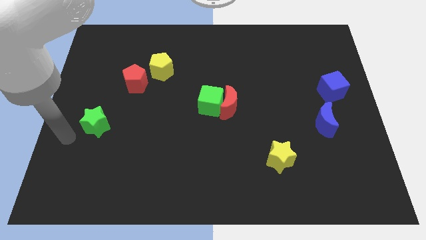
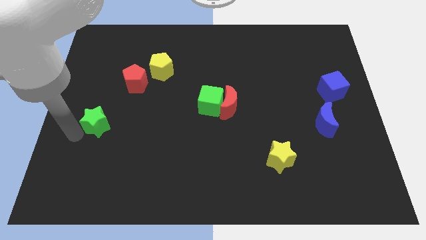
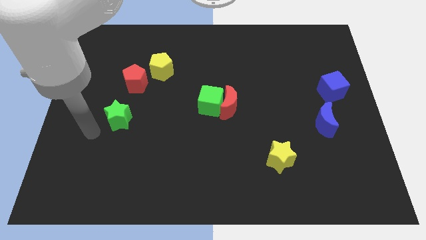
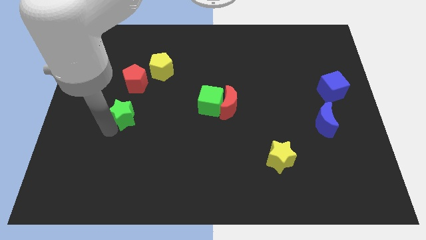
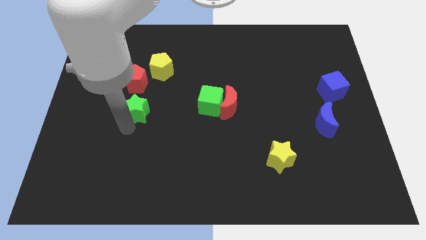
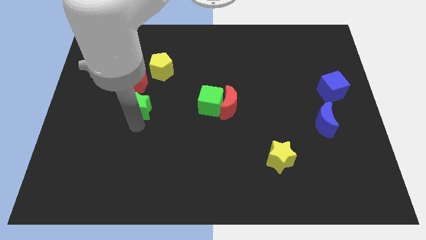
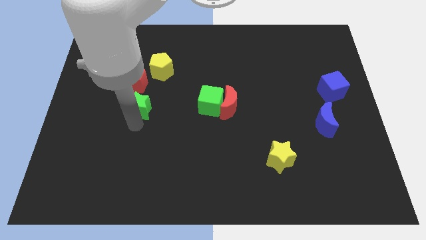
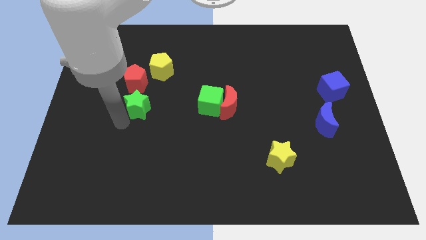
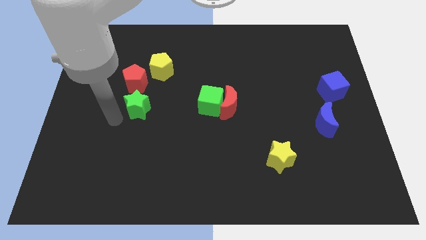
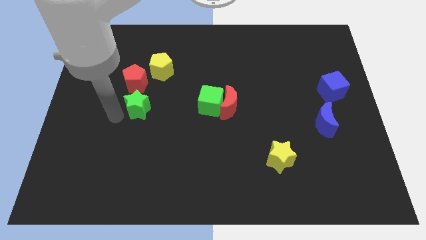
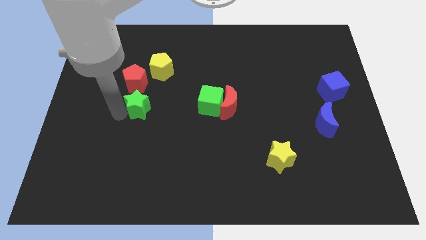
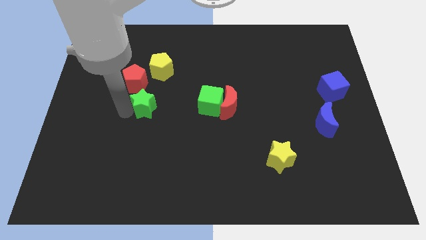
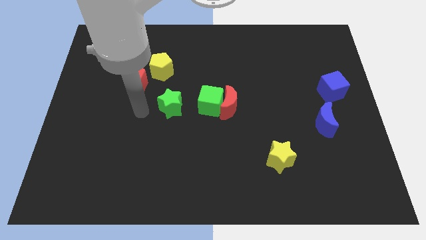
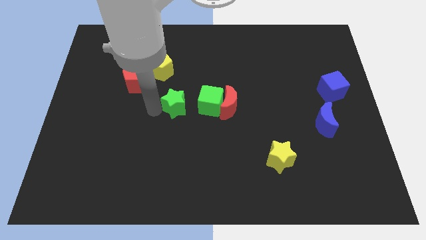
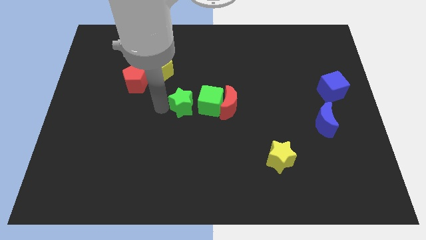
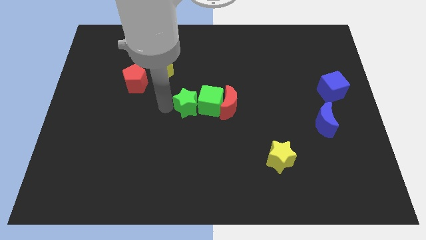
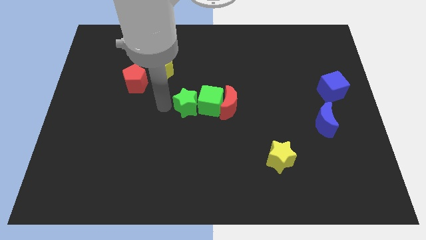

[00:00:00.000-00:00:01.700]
move the green star to the left side of the green cube

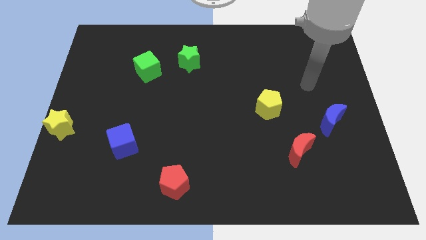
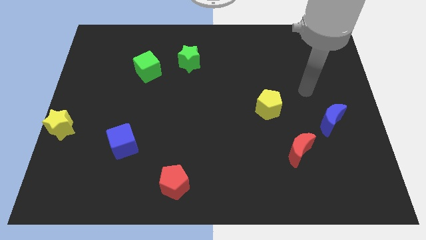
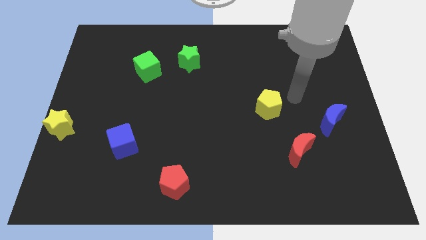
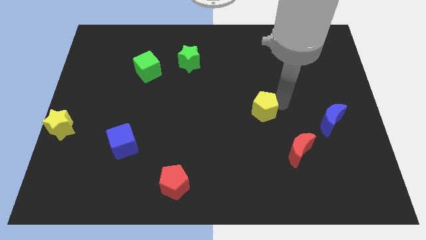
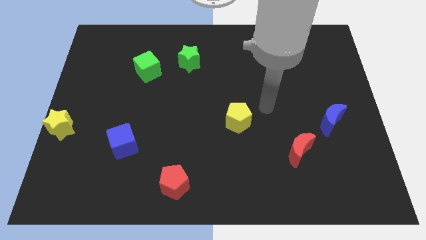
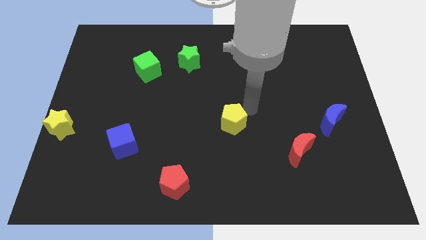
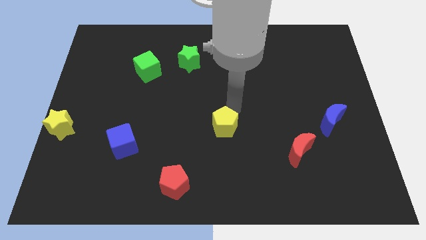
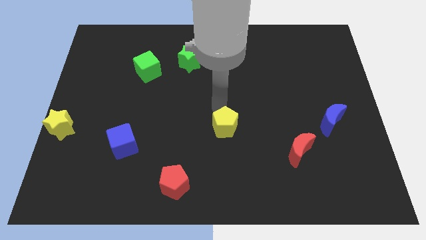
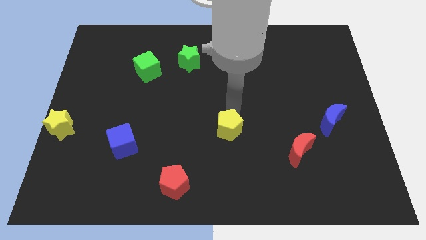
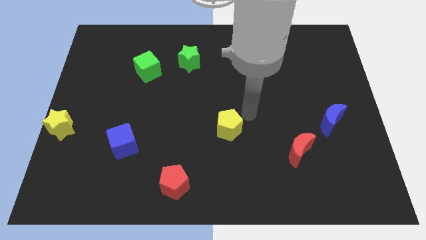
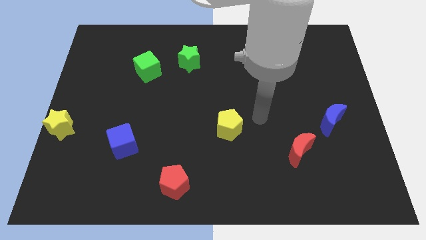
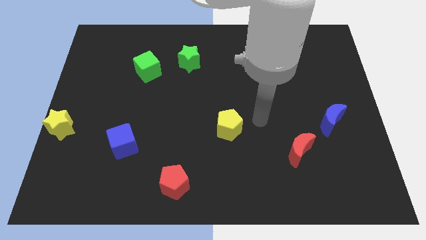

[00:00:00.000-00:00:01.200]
place the yellow pentagon to the left of the blue crescent

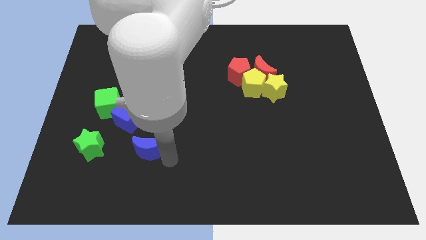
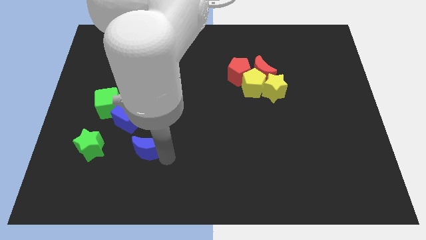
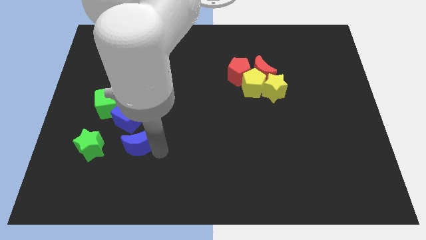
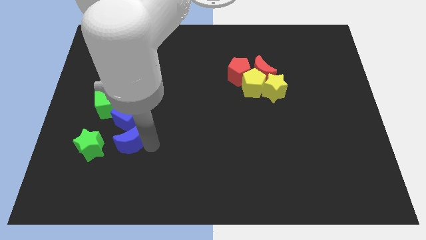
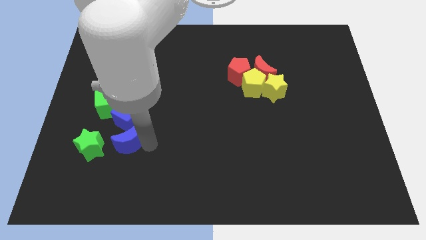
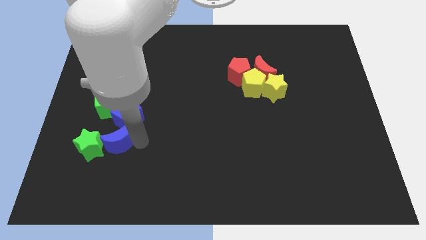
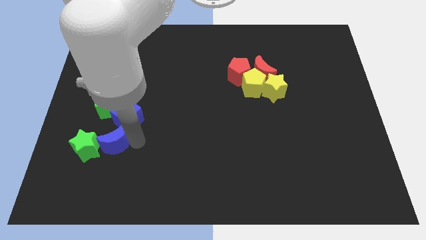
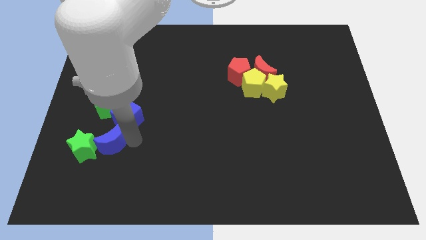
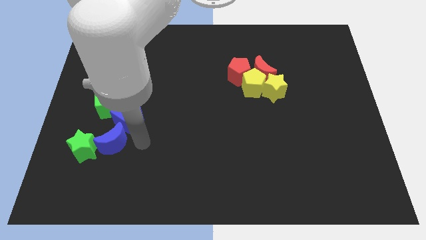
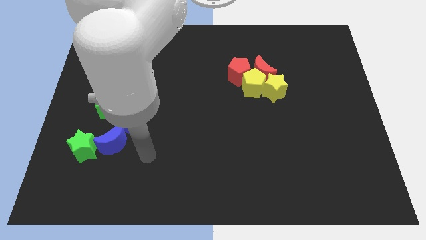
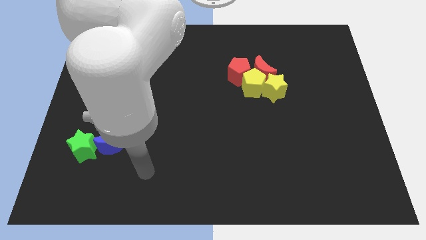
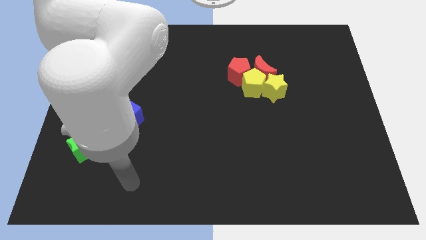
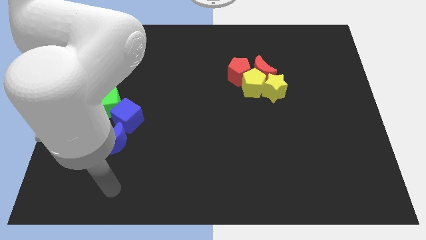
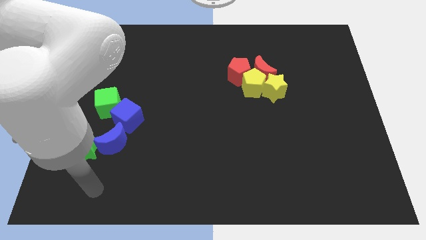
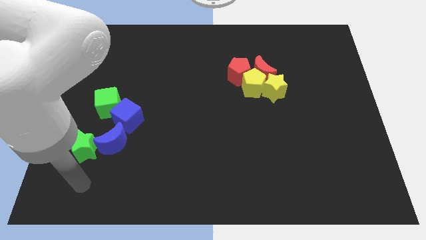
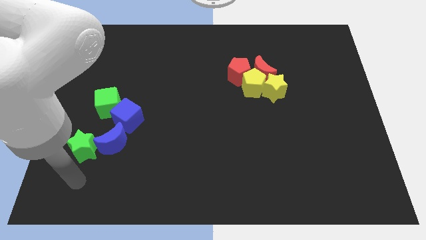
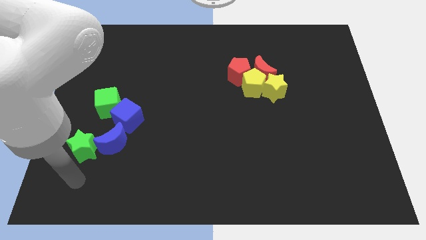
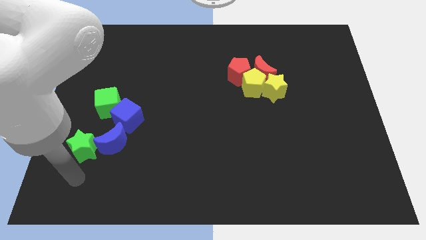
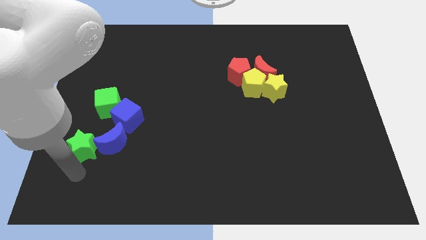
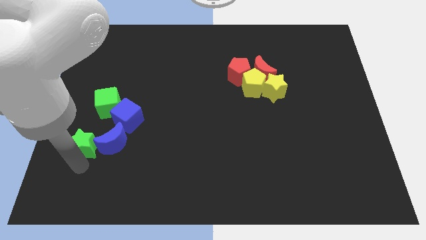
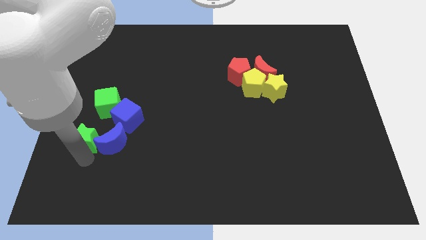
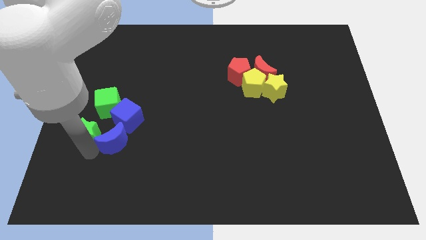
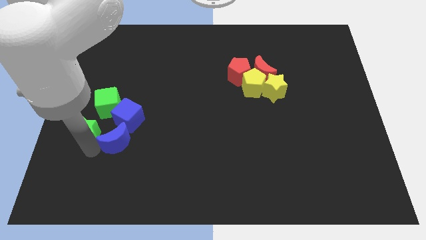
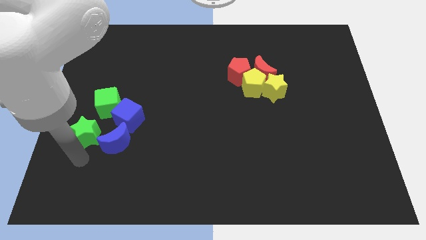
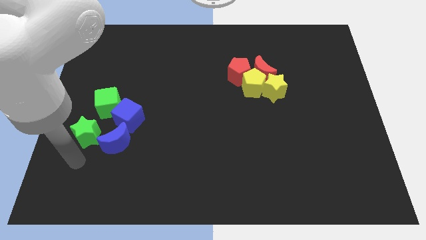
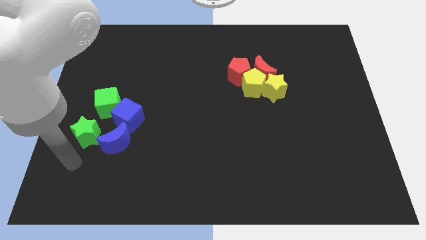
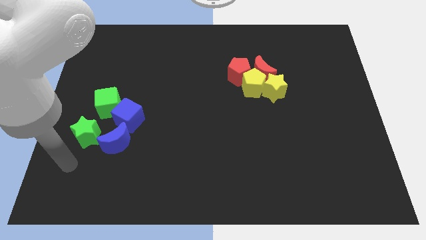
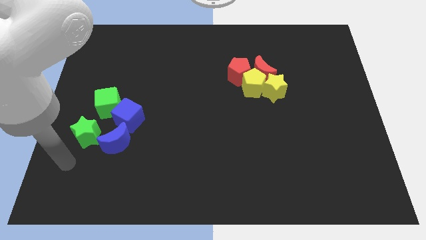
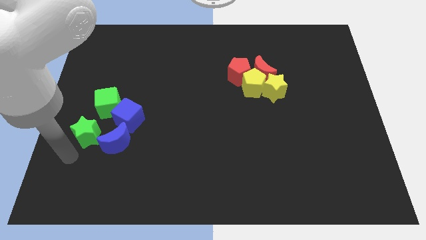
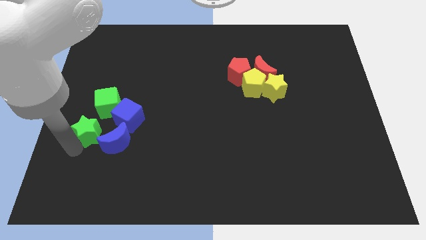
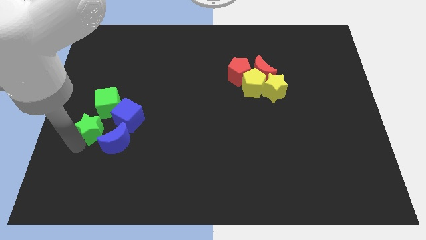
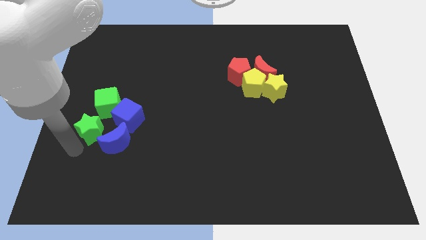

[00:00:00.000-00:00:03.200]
place green star below the green cube

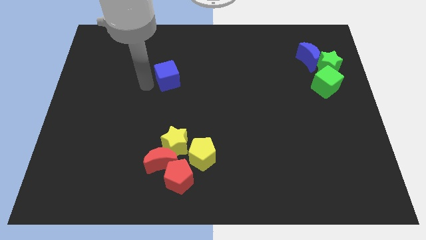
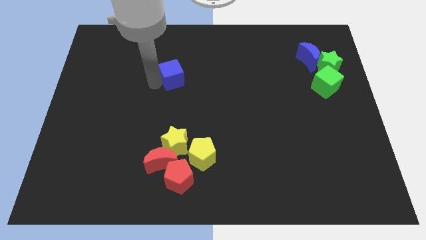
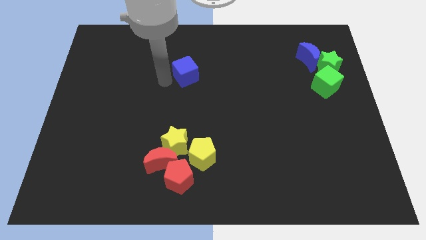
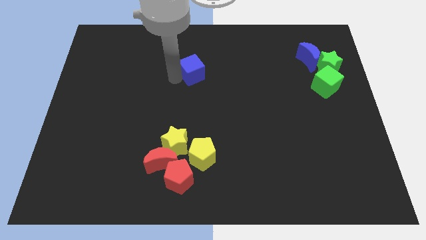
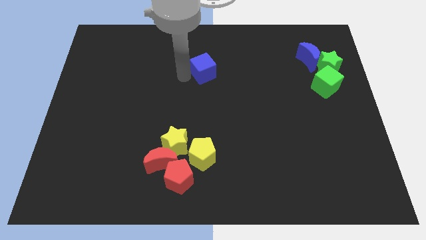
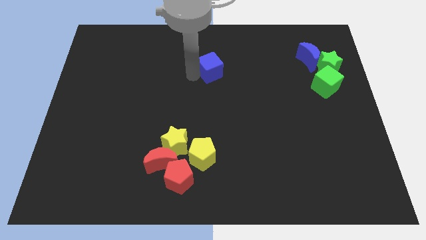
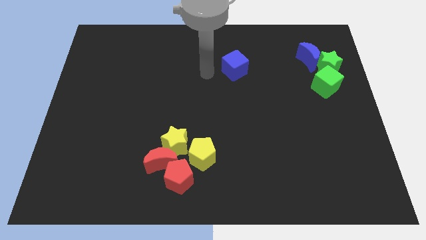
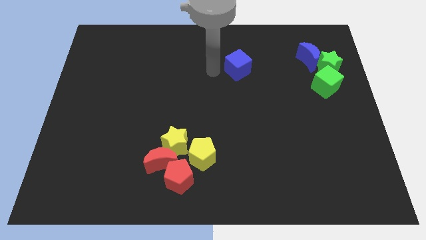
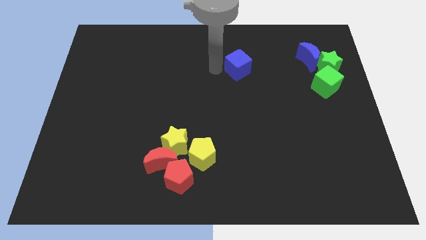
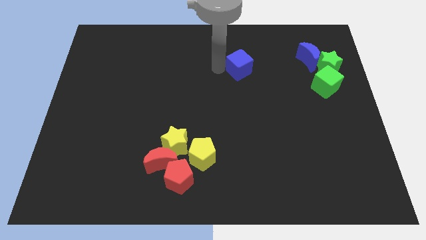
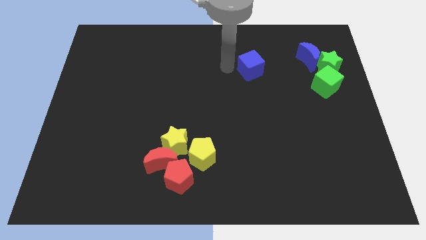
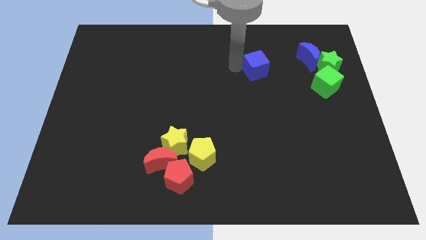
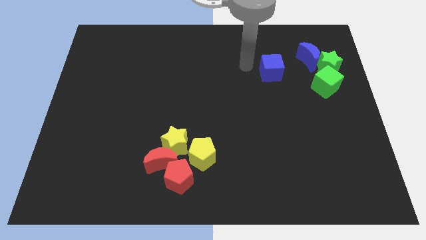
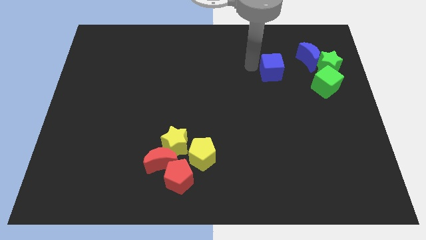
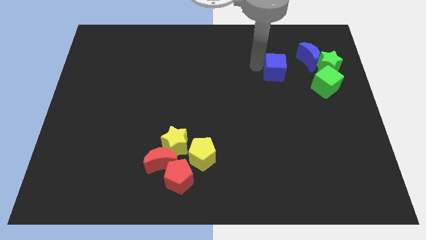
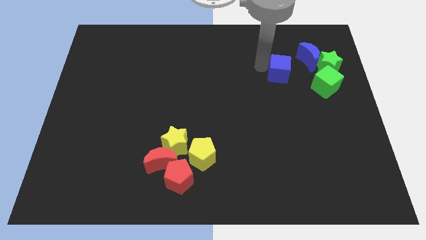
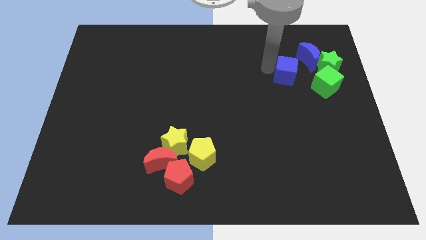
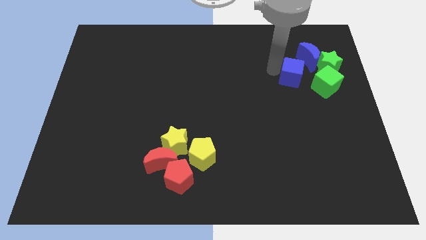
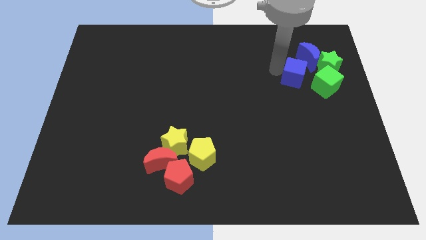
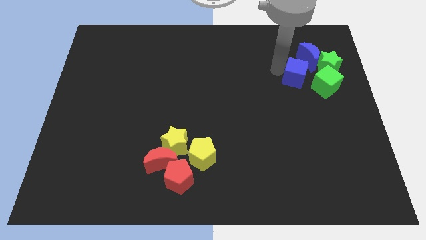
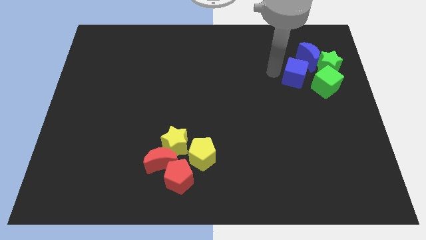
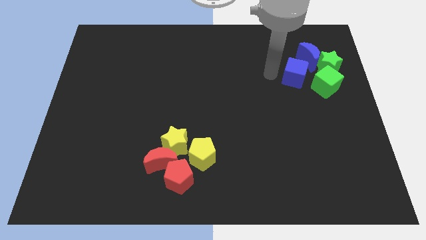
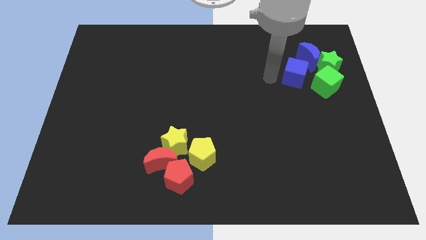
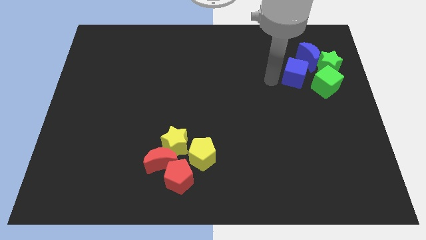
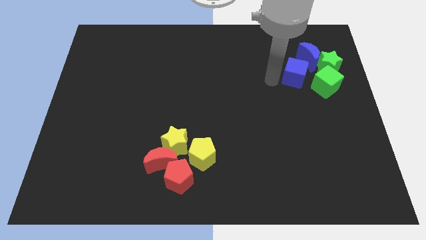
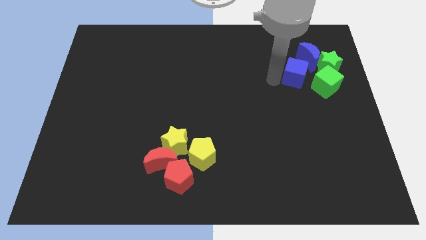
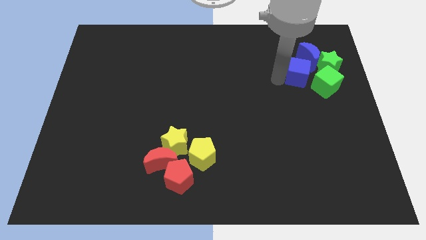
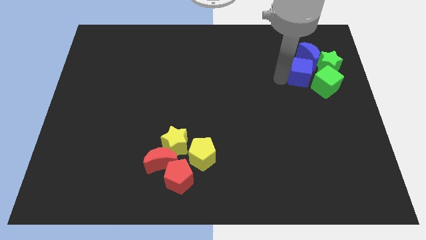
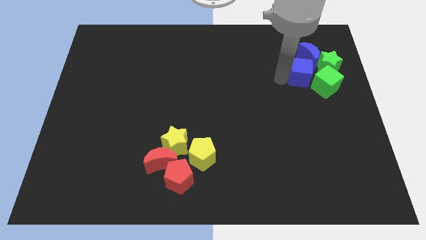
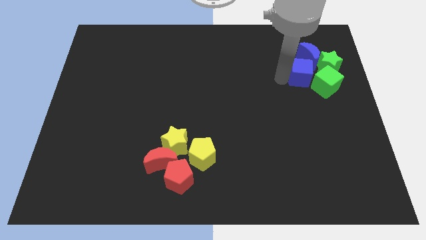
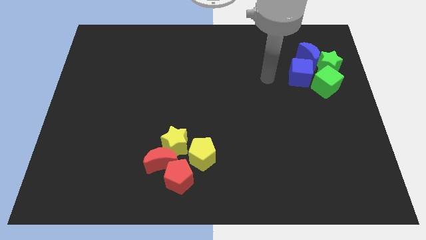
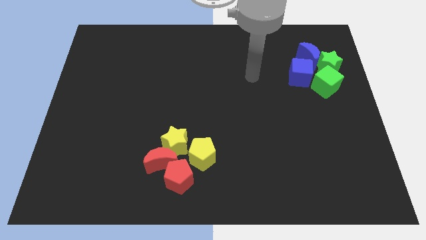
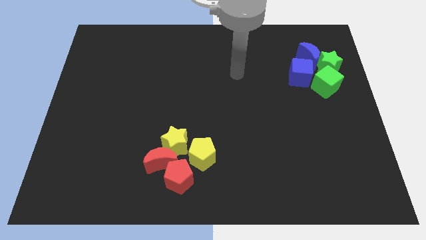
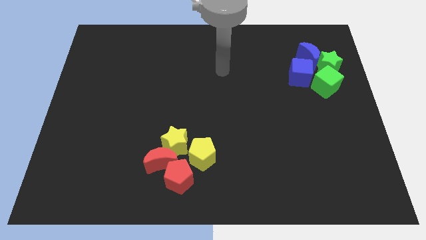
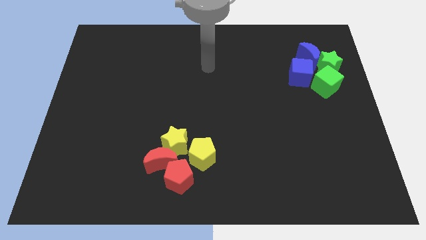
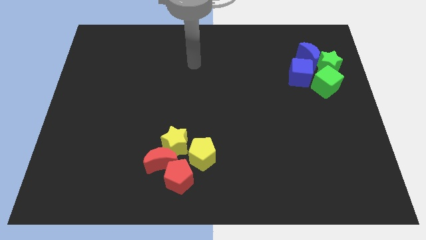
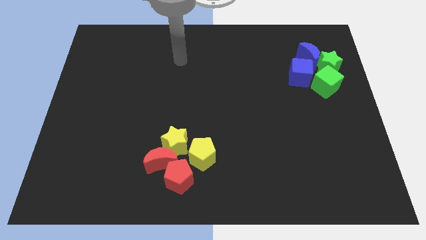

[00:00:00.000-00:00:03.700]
push blue cube into the blocks to form a group
